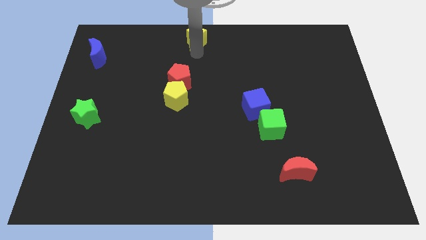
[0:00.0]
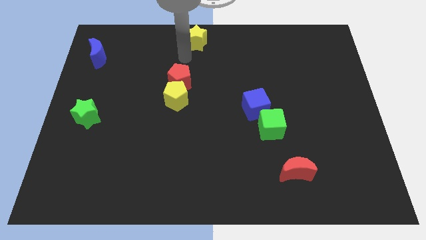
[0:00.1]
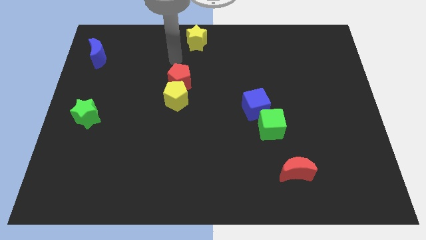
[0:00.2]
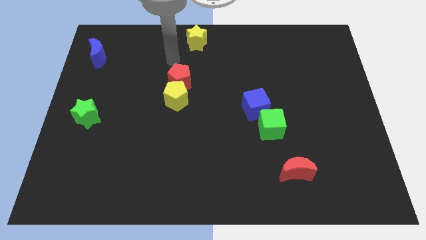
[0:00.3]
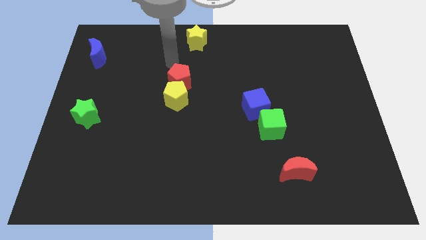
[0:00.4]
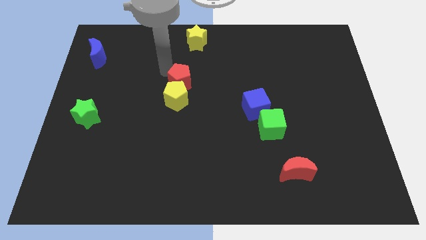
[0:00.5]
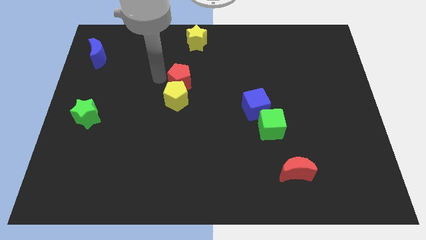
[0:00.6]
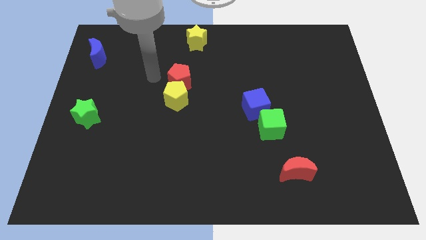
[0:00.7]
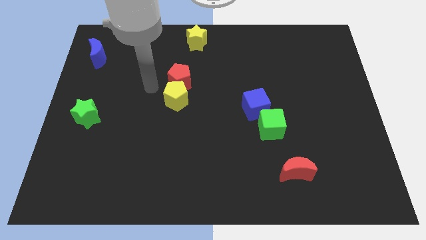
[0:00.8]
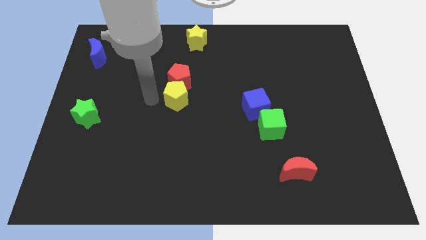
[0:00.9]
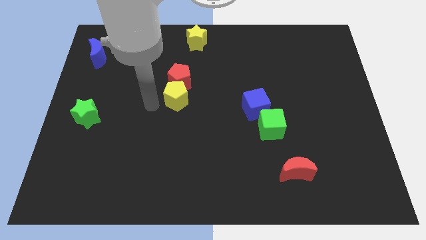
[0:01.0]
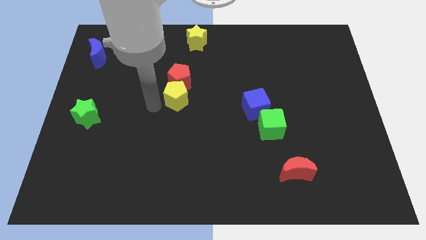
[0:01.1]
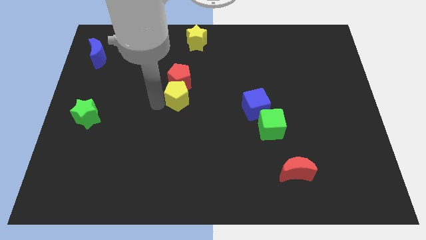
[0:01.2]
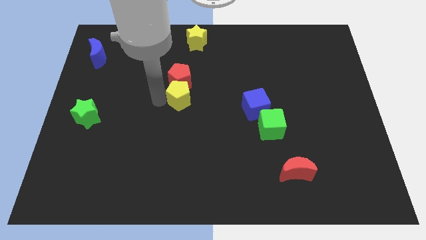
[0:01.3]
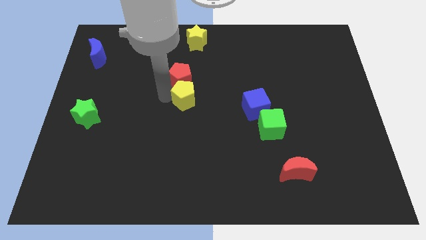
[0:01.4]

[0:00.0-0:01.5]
push the yellow pentagon slightly to the right side of the board

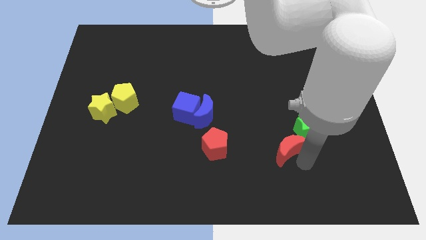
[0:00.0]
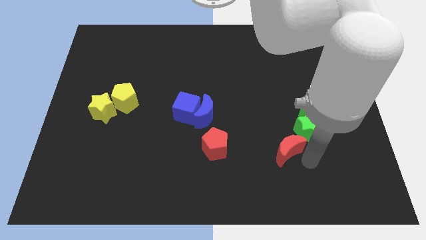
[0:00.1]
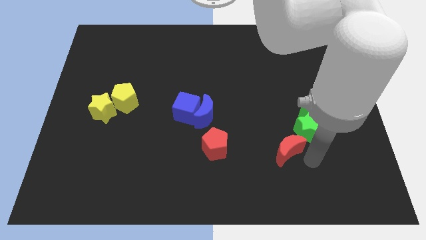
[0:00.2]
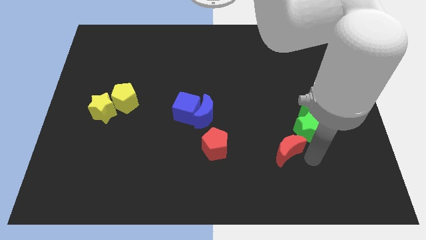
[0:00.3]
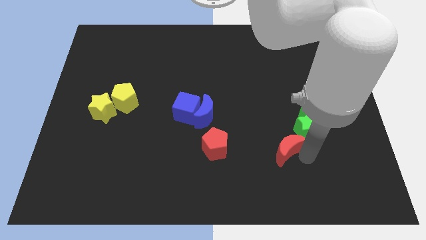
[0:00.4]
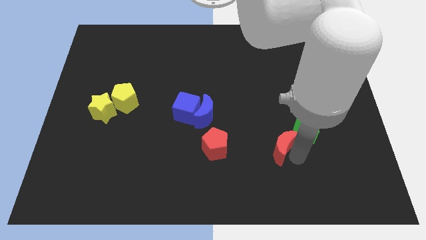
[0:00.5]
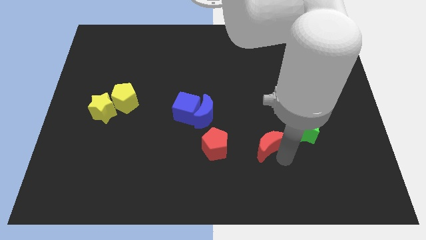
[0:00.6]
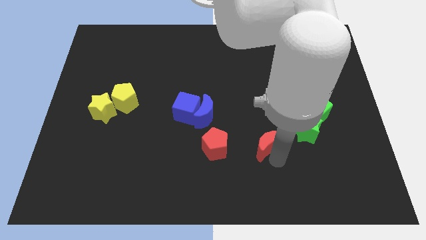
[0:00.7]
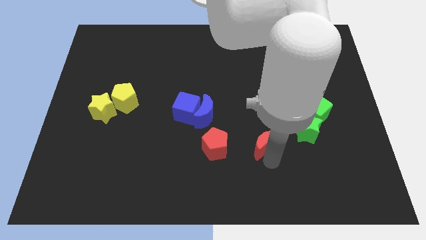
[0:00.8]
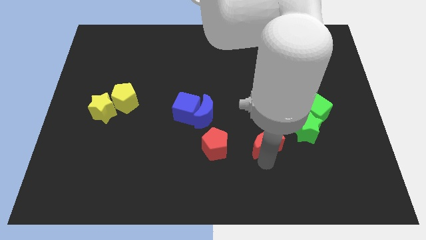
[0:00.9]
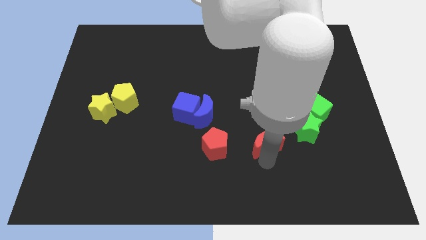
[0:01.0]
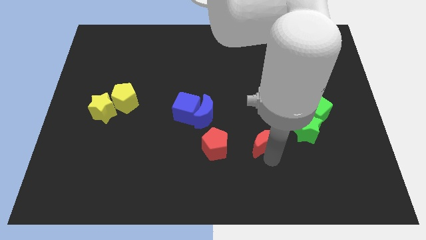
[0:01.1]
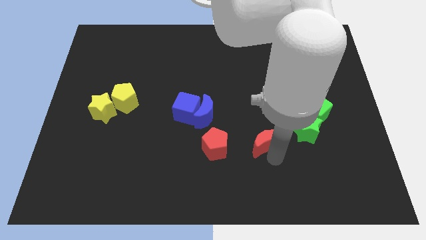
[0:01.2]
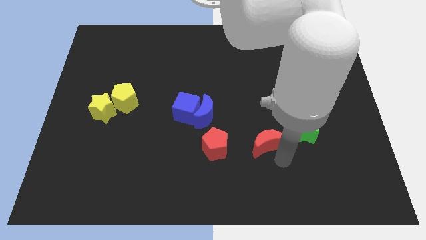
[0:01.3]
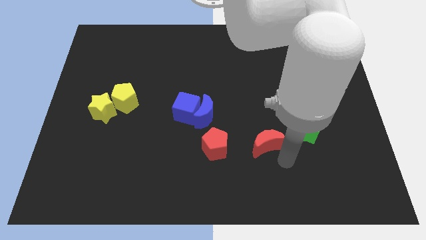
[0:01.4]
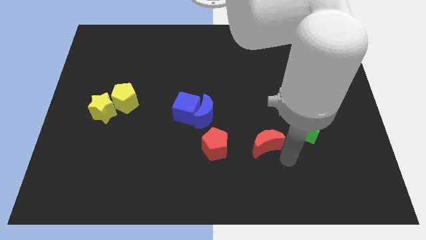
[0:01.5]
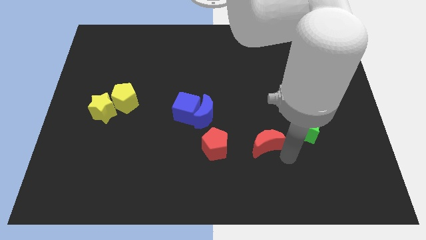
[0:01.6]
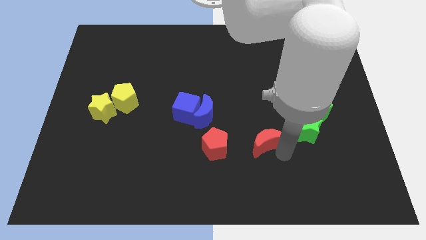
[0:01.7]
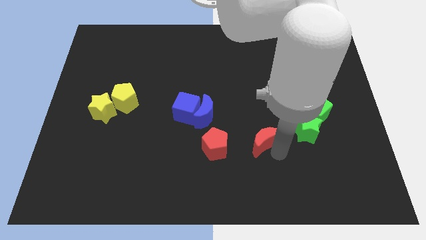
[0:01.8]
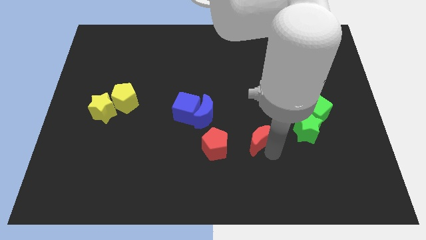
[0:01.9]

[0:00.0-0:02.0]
move the red moon to the right side of the red pentagon

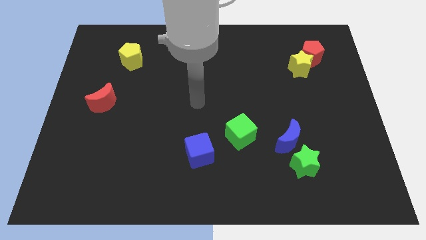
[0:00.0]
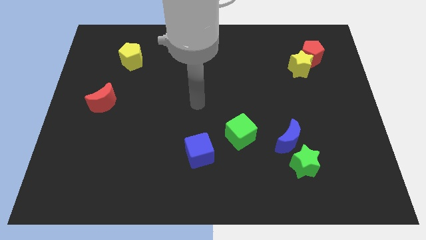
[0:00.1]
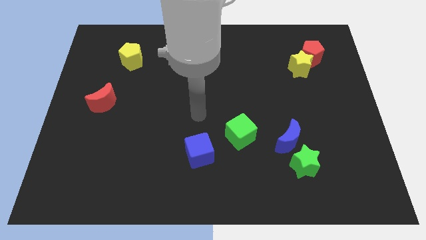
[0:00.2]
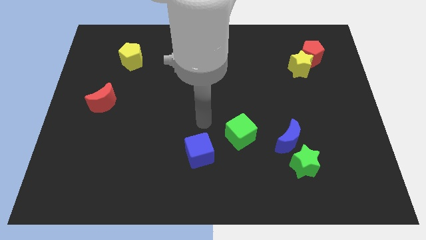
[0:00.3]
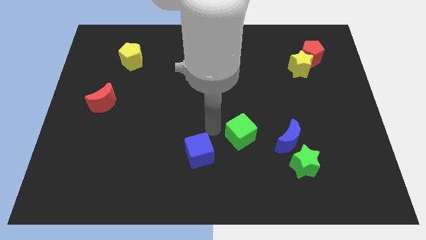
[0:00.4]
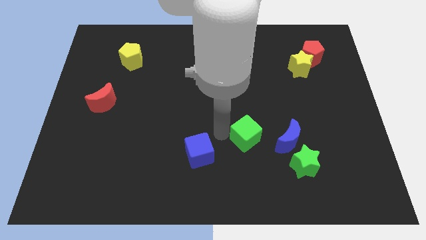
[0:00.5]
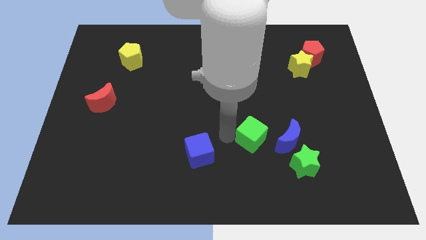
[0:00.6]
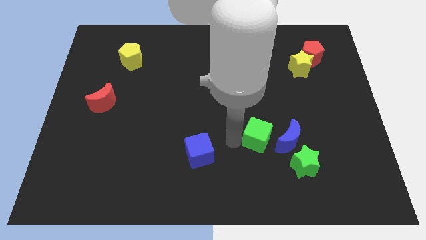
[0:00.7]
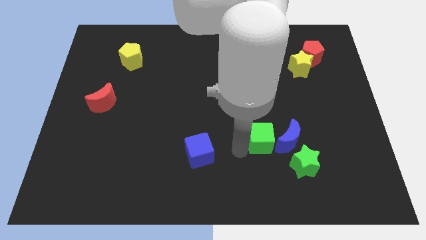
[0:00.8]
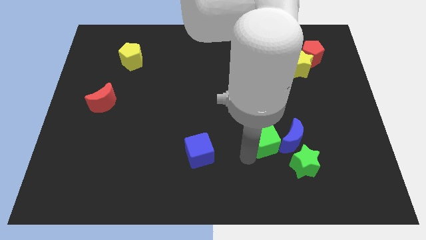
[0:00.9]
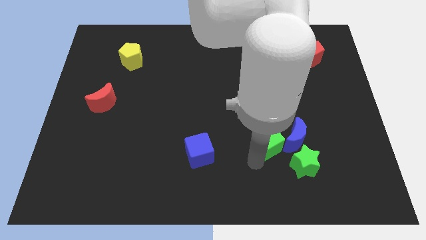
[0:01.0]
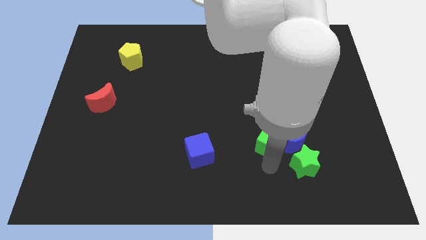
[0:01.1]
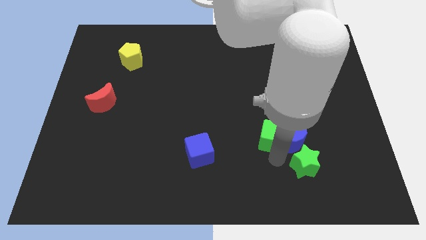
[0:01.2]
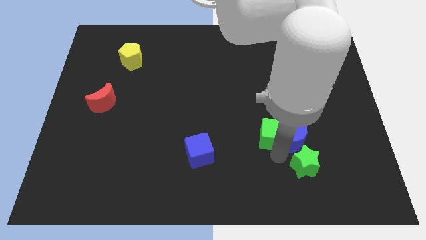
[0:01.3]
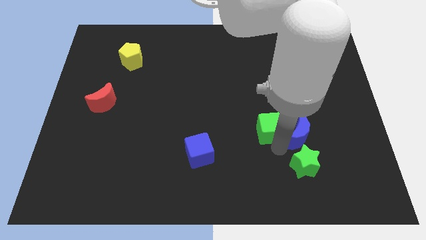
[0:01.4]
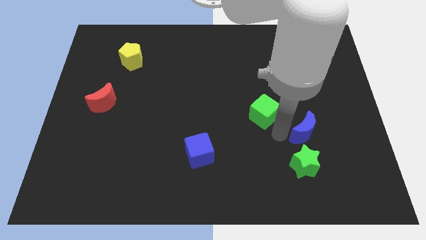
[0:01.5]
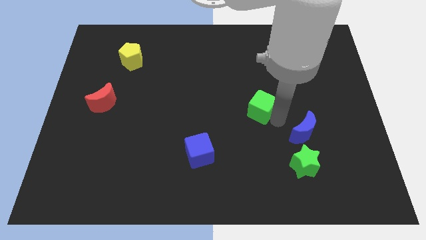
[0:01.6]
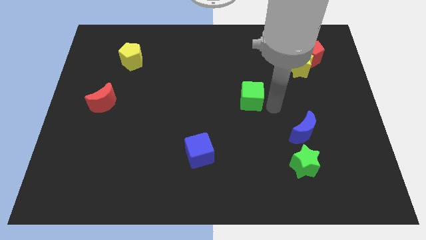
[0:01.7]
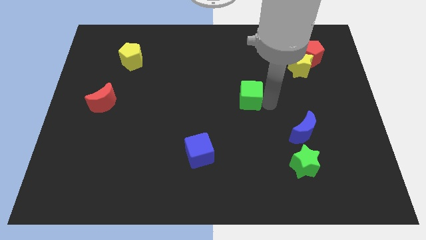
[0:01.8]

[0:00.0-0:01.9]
push the green cube upwards

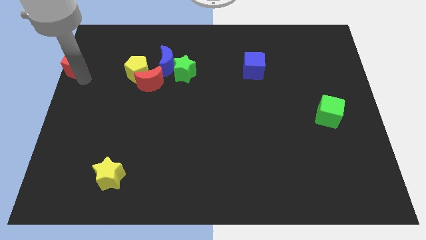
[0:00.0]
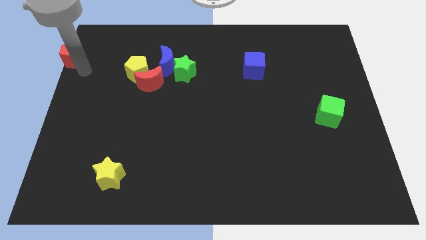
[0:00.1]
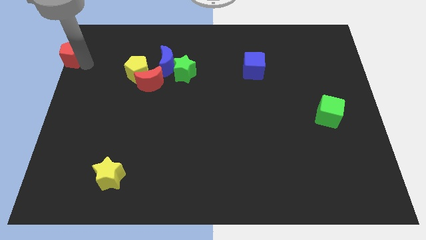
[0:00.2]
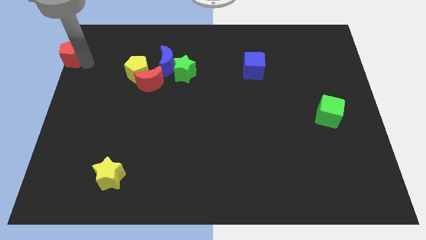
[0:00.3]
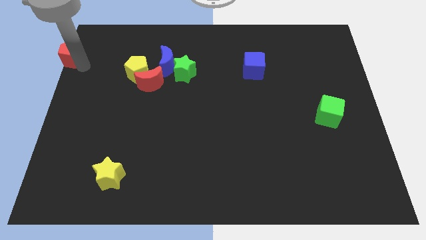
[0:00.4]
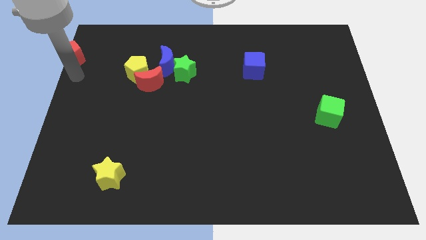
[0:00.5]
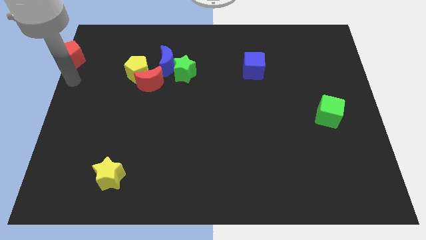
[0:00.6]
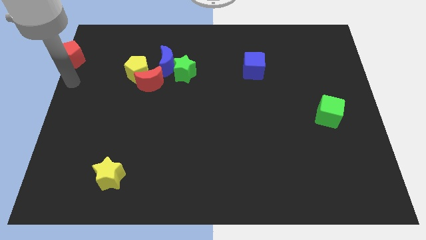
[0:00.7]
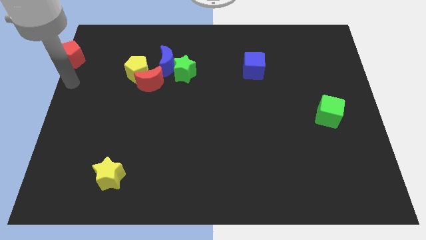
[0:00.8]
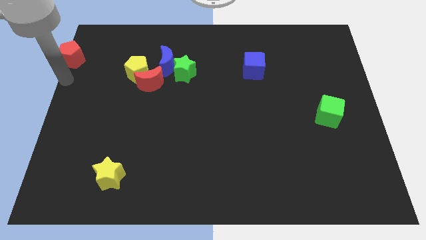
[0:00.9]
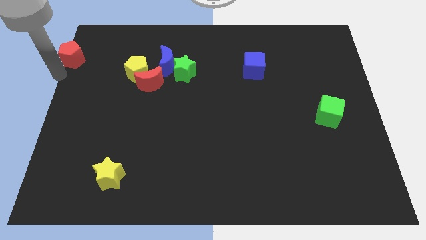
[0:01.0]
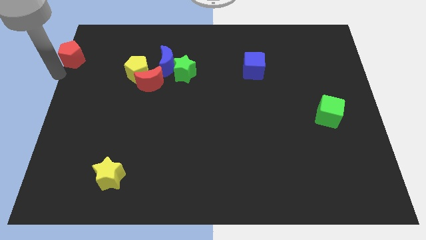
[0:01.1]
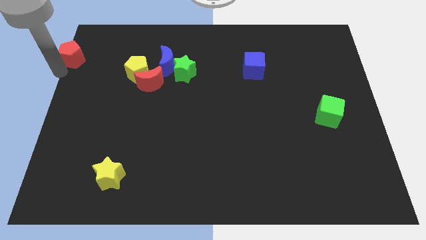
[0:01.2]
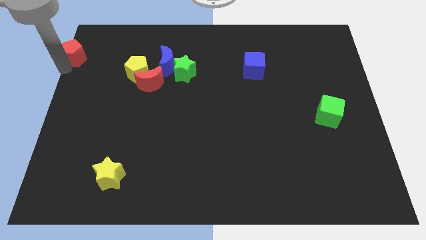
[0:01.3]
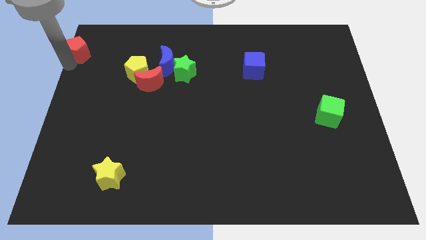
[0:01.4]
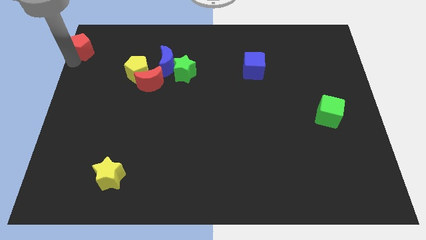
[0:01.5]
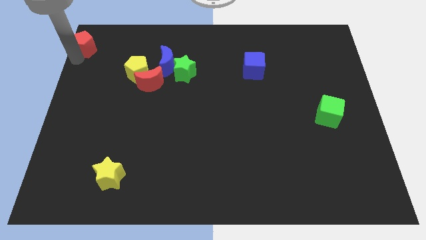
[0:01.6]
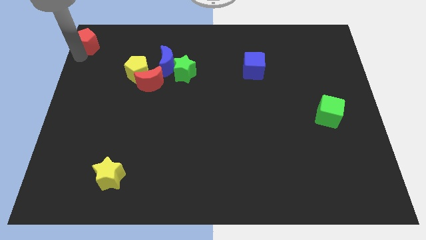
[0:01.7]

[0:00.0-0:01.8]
slide the red pentagon to top left
